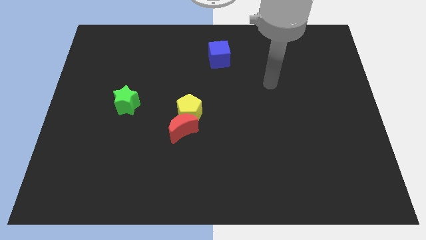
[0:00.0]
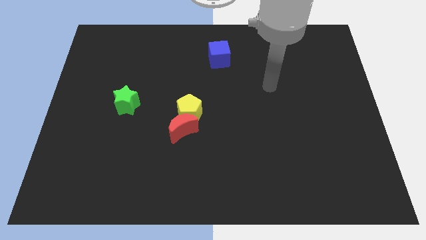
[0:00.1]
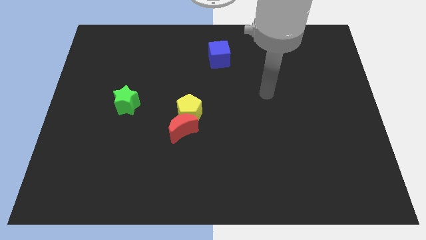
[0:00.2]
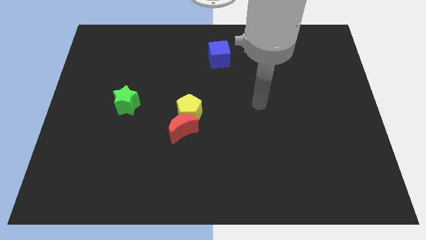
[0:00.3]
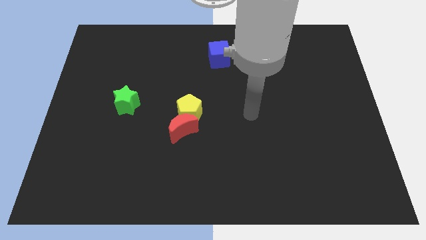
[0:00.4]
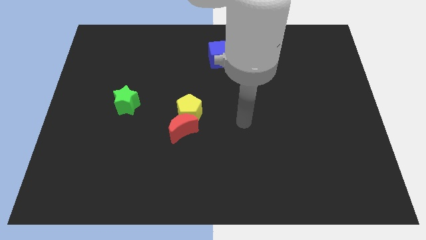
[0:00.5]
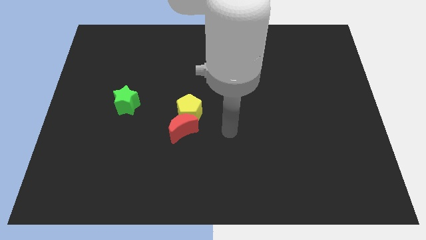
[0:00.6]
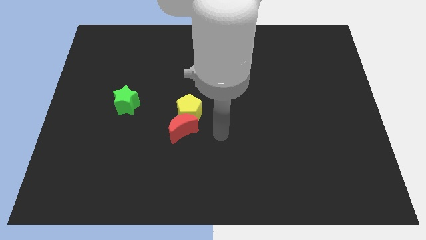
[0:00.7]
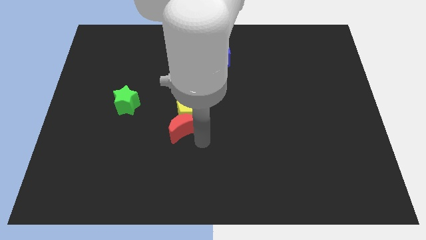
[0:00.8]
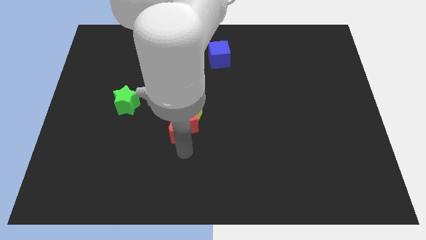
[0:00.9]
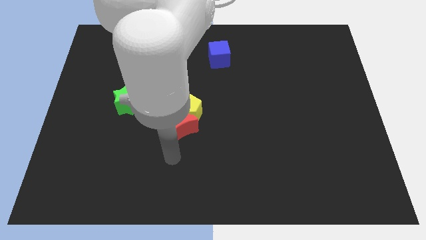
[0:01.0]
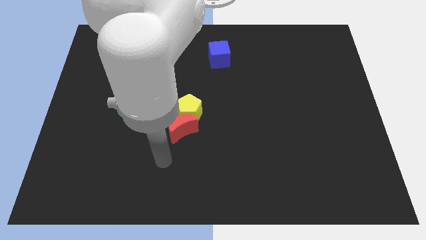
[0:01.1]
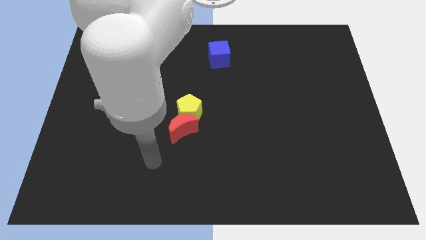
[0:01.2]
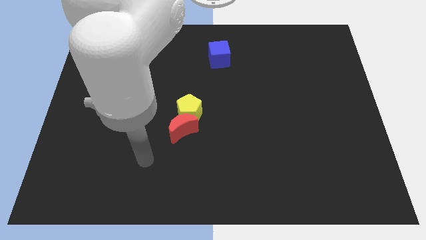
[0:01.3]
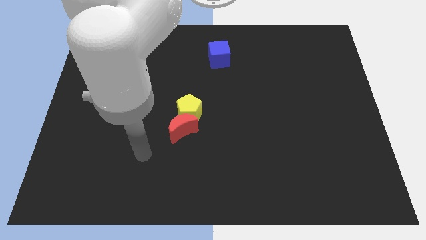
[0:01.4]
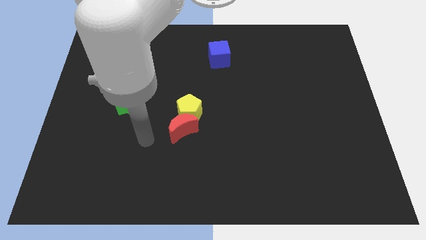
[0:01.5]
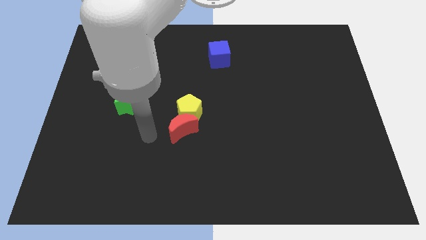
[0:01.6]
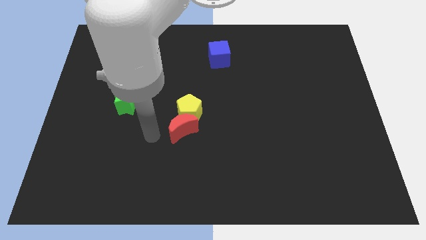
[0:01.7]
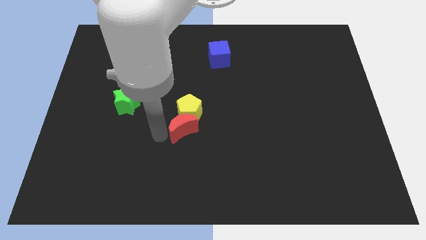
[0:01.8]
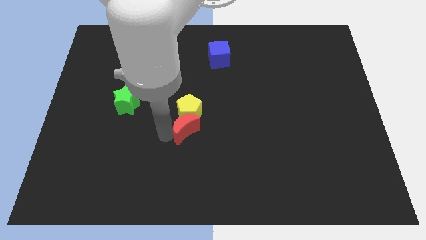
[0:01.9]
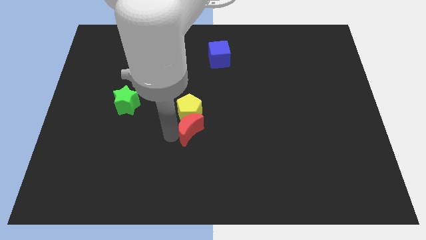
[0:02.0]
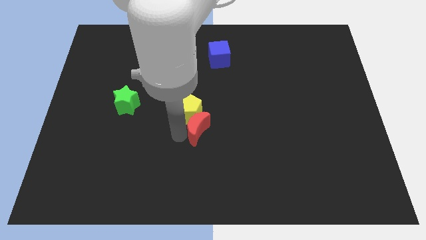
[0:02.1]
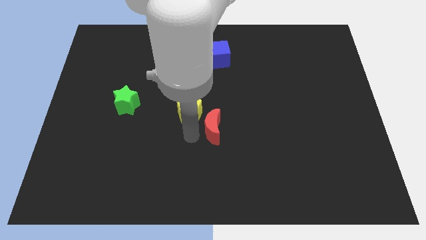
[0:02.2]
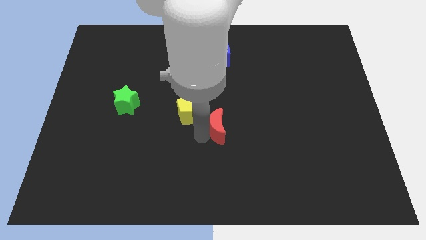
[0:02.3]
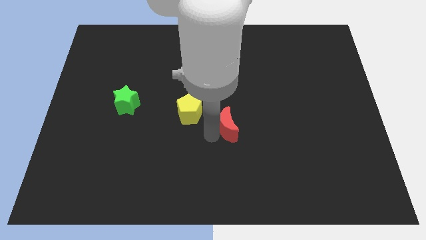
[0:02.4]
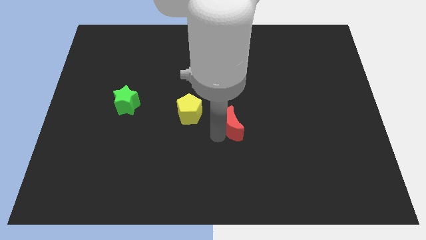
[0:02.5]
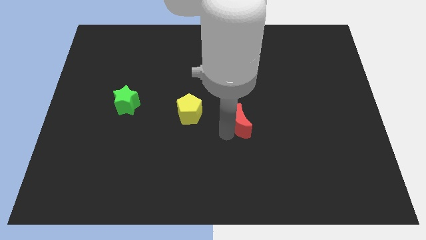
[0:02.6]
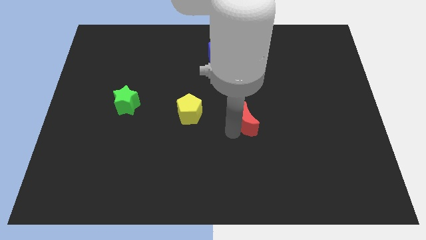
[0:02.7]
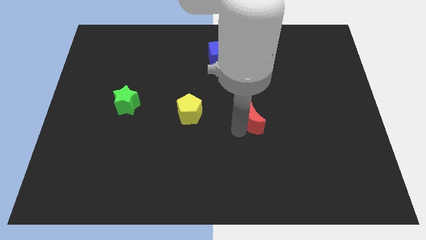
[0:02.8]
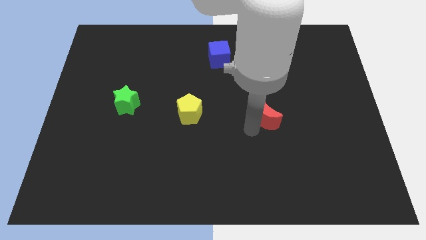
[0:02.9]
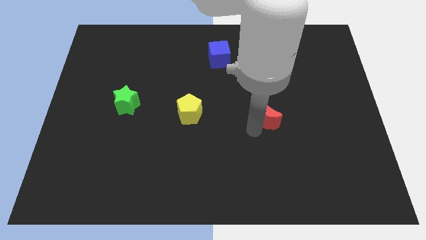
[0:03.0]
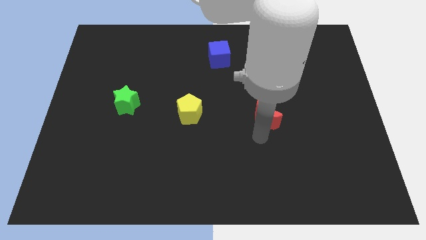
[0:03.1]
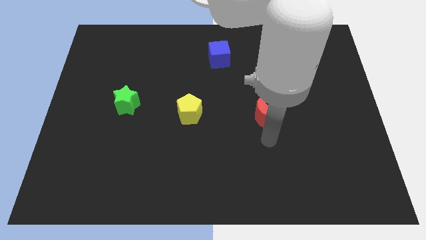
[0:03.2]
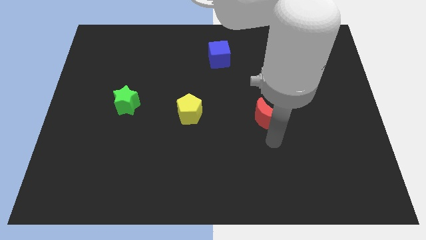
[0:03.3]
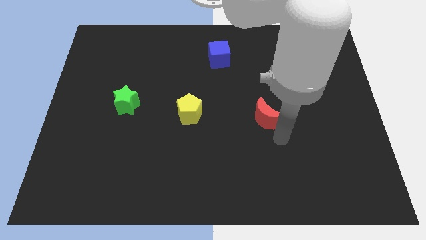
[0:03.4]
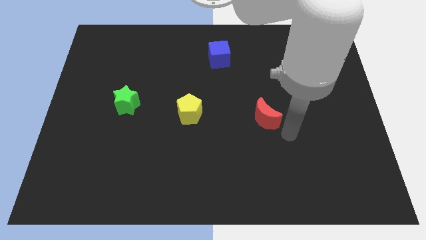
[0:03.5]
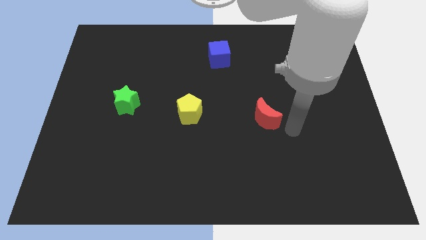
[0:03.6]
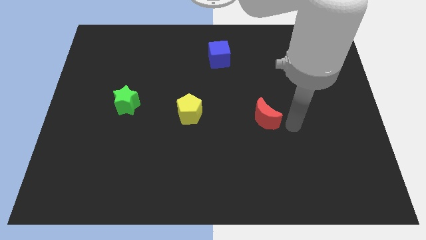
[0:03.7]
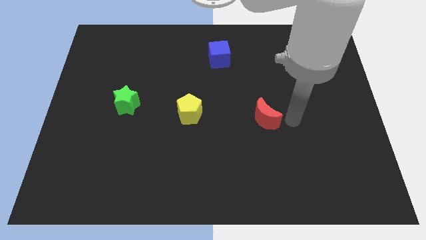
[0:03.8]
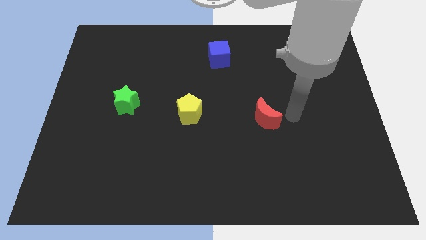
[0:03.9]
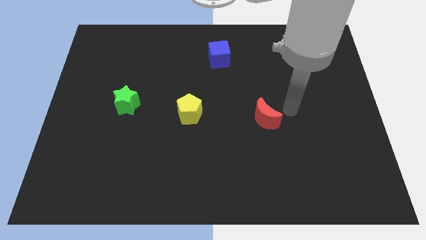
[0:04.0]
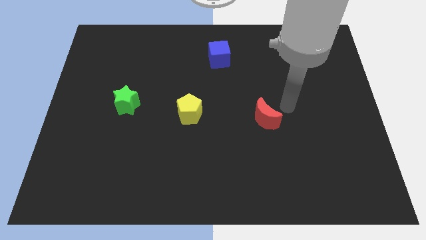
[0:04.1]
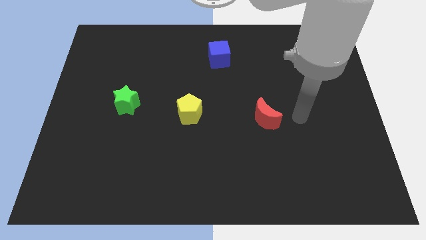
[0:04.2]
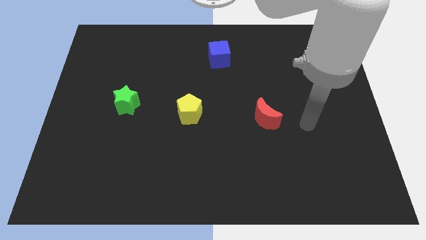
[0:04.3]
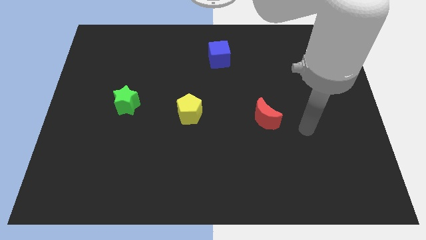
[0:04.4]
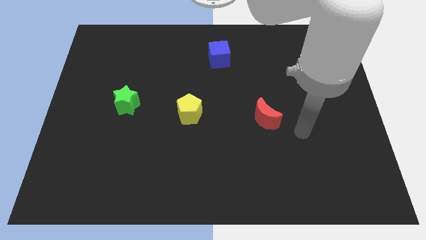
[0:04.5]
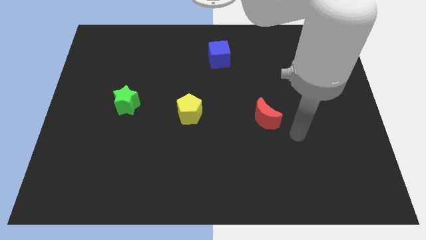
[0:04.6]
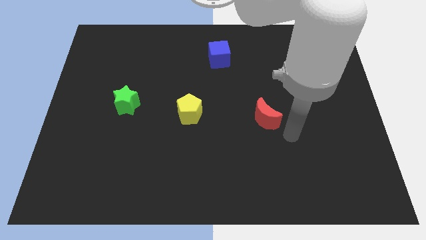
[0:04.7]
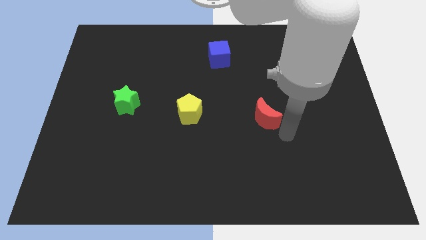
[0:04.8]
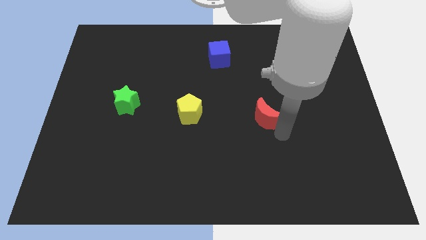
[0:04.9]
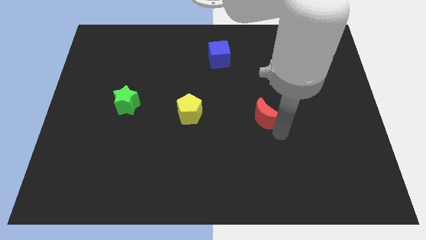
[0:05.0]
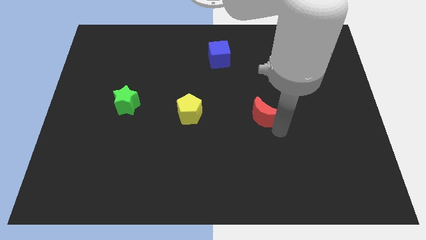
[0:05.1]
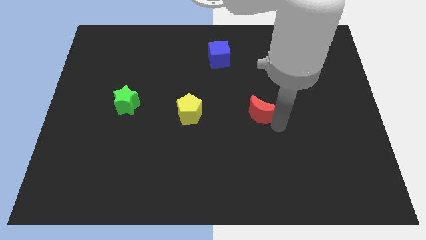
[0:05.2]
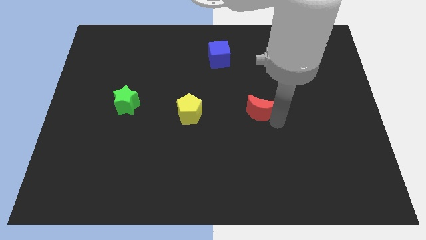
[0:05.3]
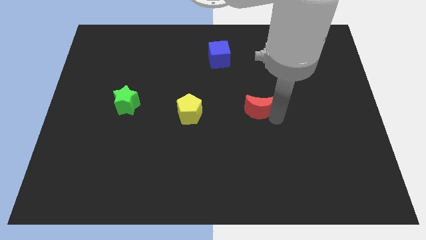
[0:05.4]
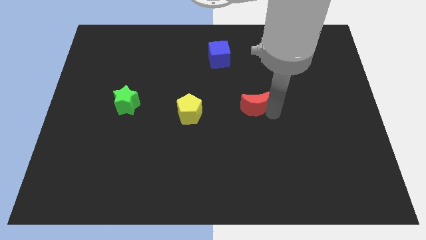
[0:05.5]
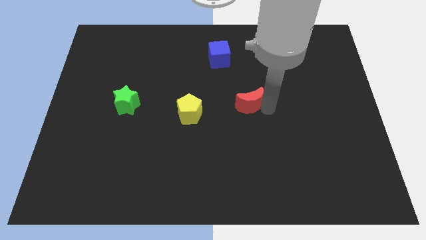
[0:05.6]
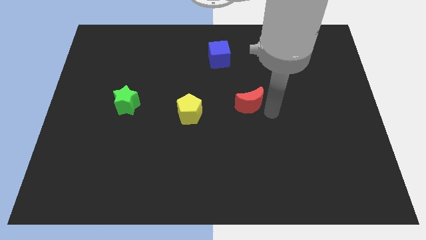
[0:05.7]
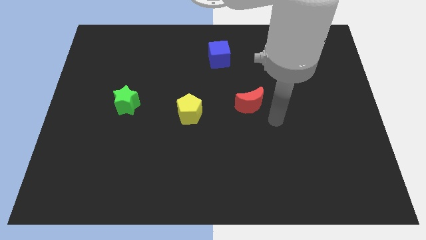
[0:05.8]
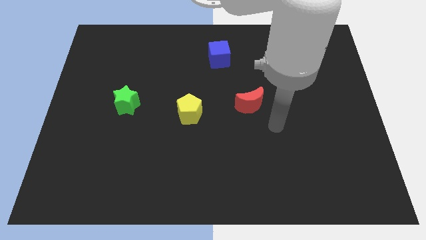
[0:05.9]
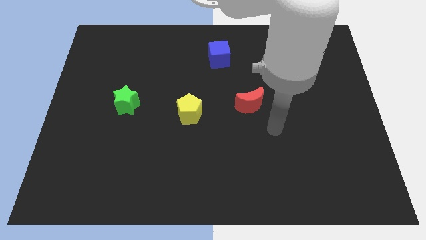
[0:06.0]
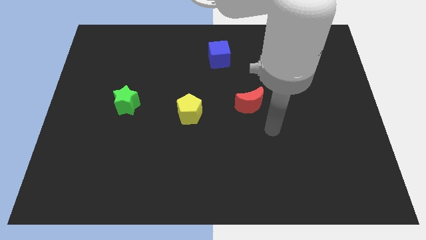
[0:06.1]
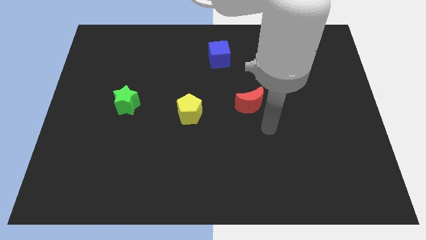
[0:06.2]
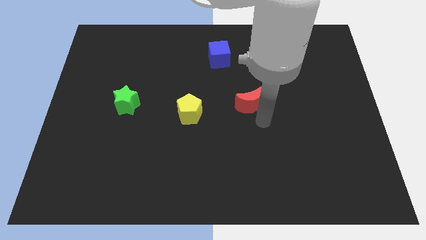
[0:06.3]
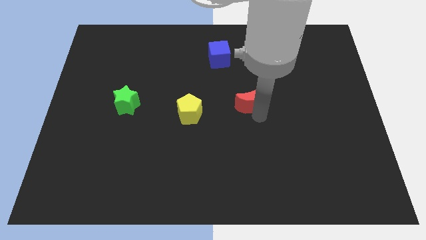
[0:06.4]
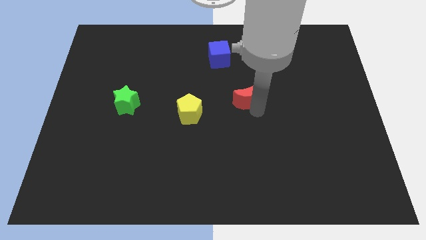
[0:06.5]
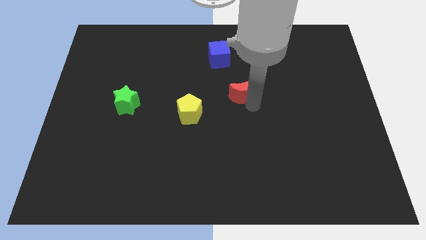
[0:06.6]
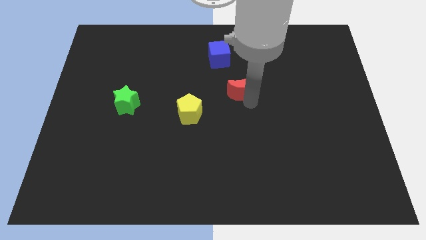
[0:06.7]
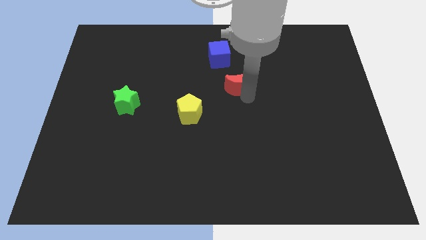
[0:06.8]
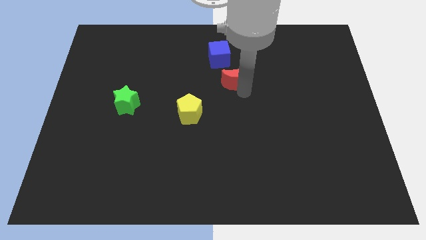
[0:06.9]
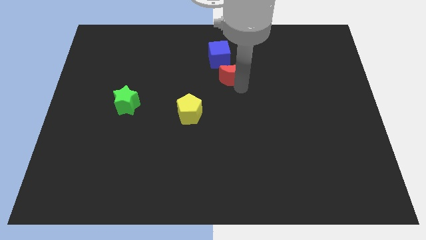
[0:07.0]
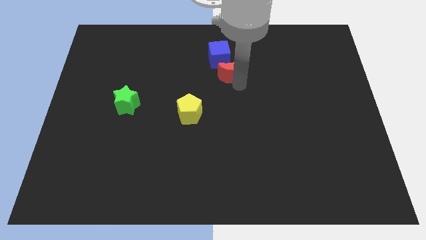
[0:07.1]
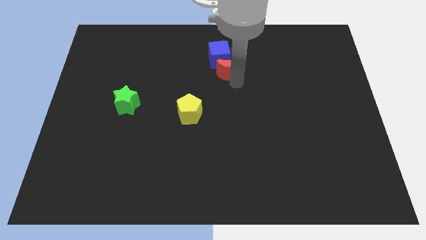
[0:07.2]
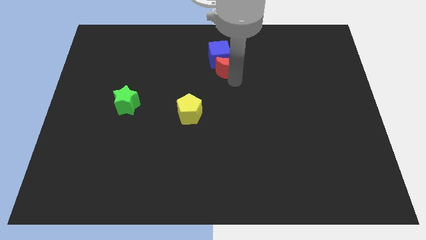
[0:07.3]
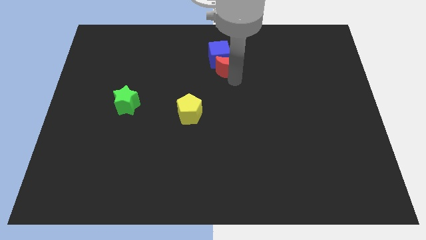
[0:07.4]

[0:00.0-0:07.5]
slide the red block next to the cube

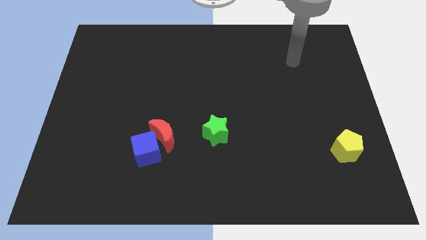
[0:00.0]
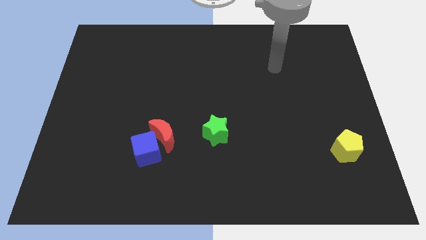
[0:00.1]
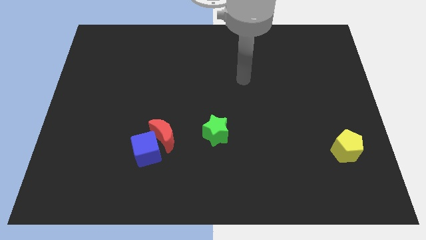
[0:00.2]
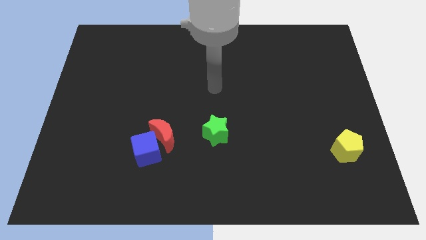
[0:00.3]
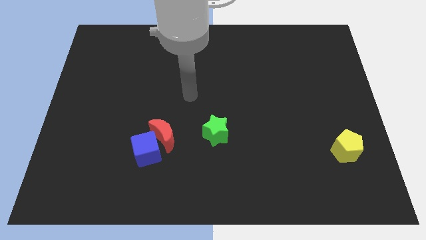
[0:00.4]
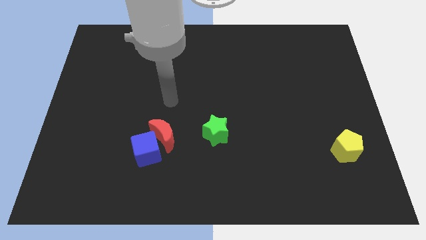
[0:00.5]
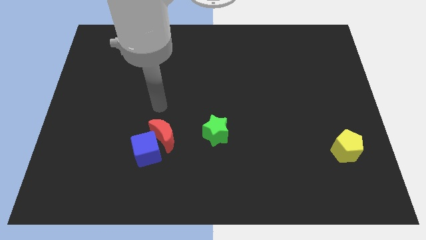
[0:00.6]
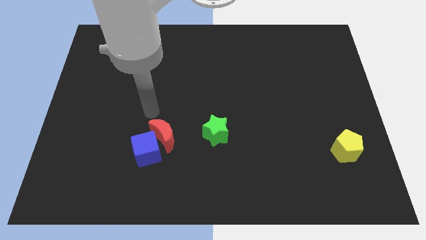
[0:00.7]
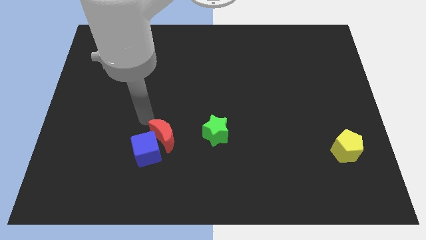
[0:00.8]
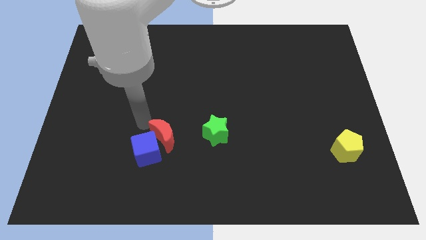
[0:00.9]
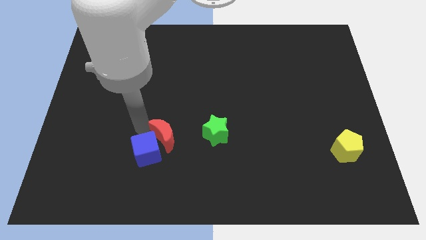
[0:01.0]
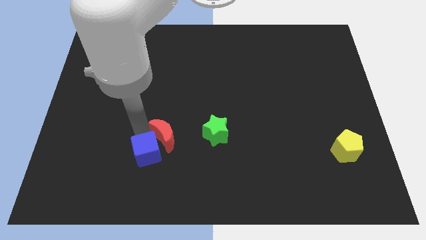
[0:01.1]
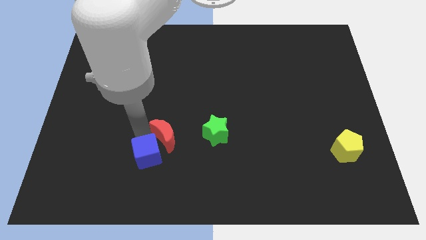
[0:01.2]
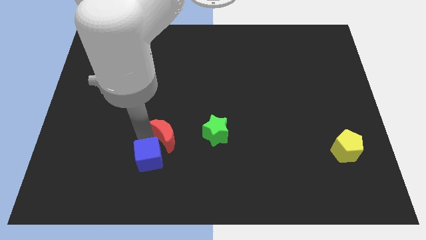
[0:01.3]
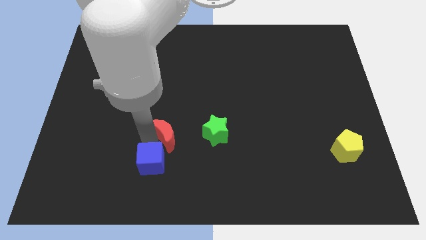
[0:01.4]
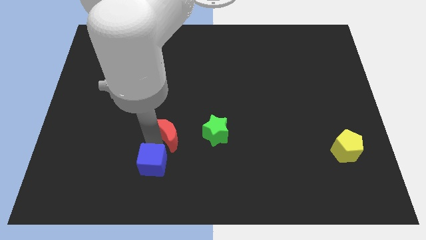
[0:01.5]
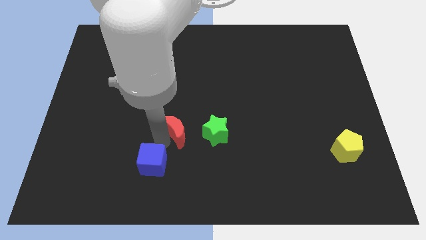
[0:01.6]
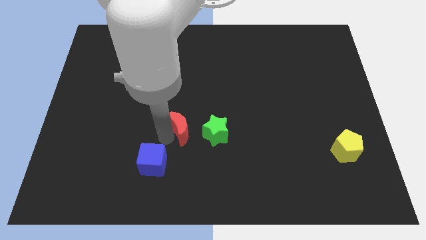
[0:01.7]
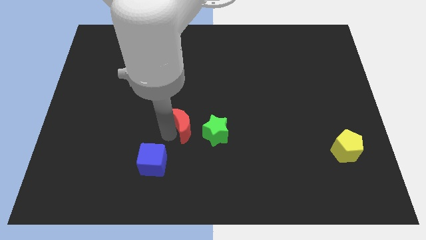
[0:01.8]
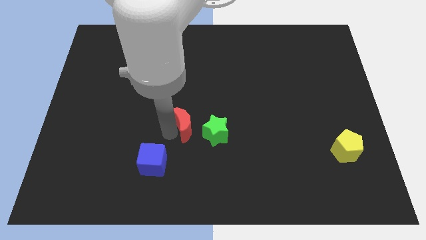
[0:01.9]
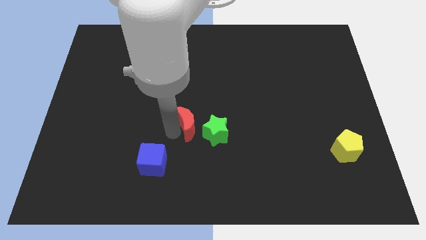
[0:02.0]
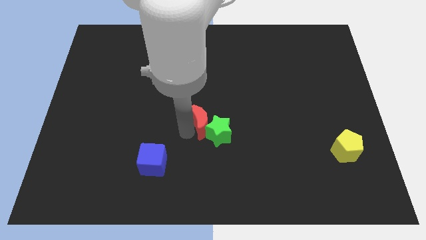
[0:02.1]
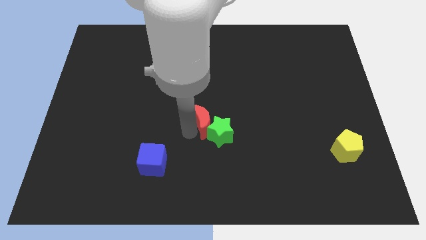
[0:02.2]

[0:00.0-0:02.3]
move the red block towards the star
